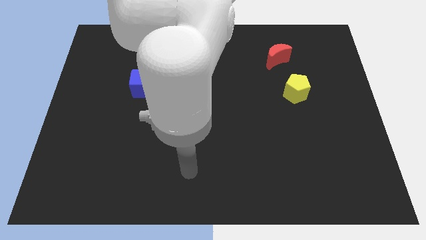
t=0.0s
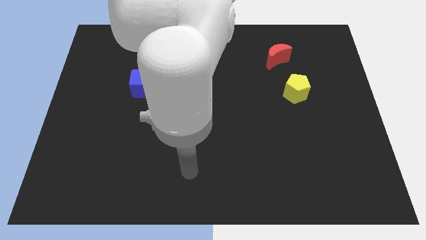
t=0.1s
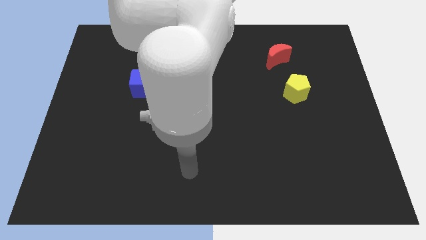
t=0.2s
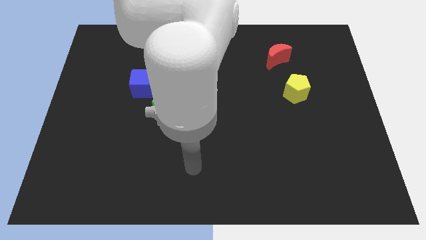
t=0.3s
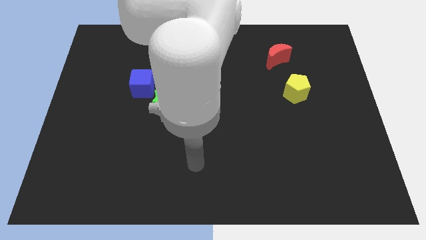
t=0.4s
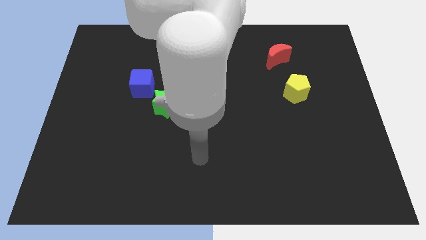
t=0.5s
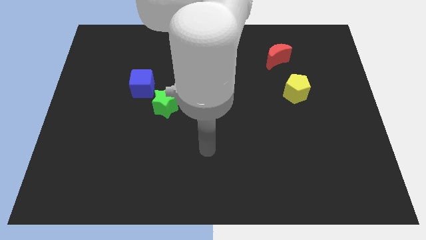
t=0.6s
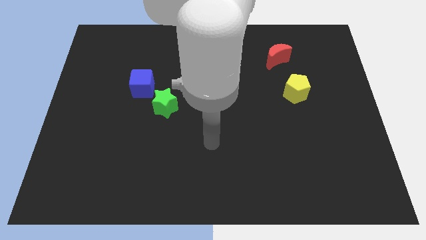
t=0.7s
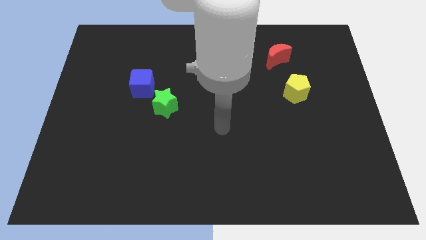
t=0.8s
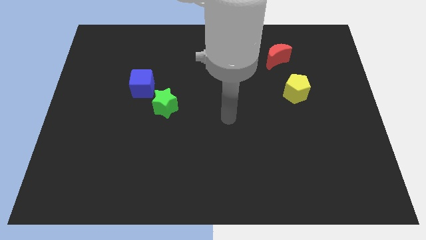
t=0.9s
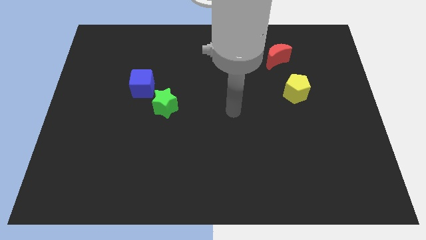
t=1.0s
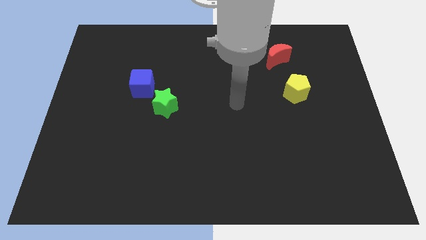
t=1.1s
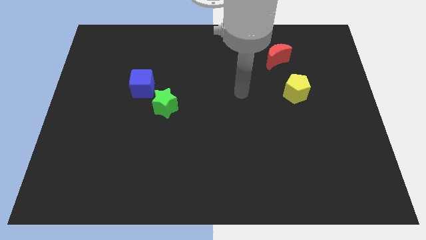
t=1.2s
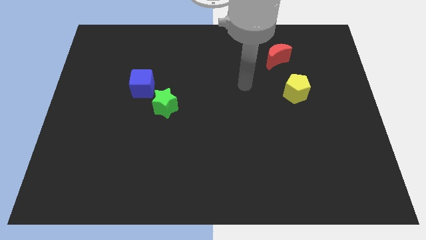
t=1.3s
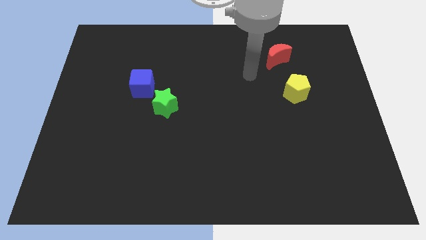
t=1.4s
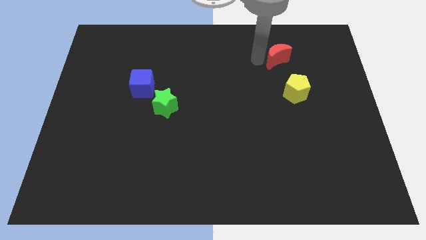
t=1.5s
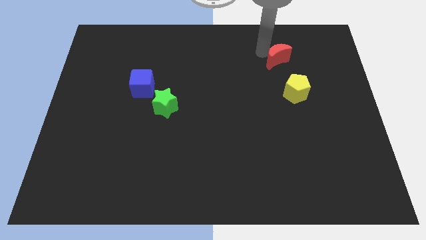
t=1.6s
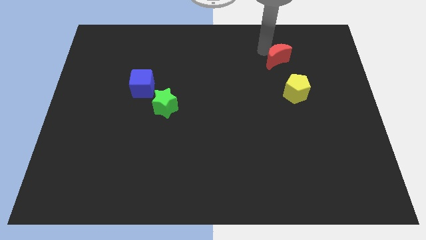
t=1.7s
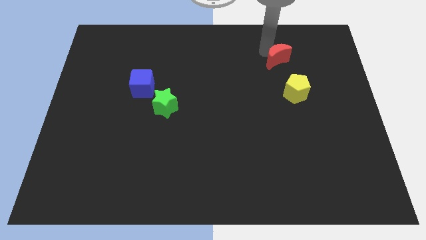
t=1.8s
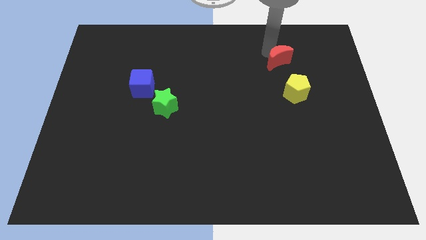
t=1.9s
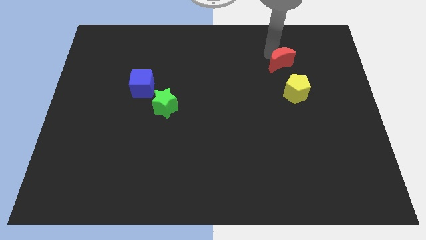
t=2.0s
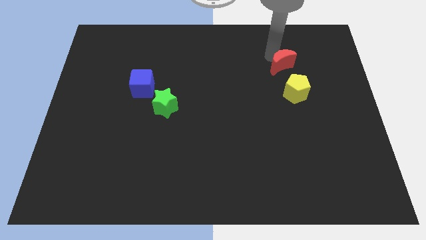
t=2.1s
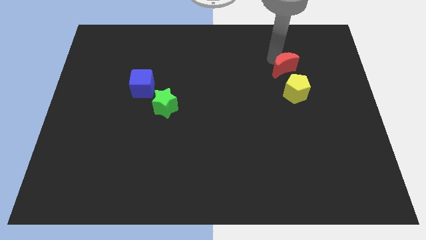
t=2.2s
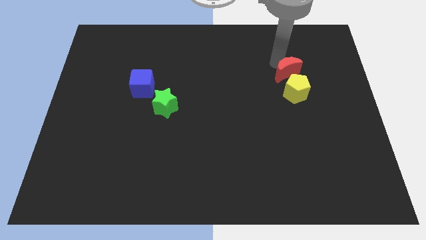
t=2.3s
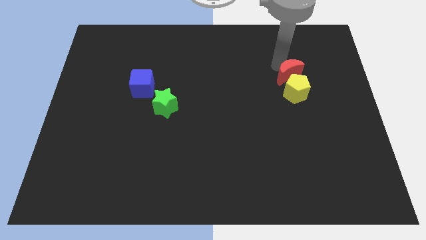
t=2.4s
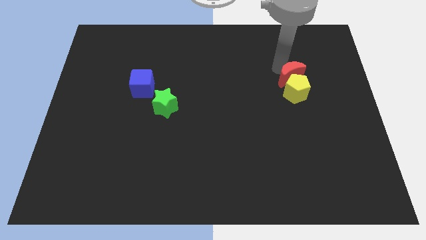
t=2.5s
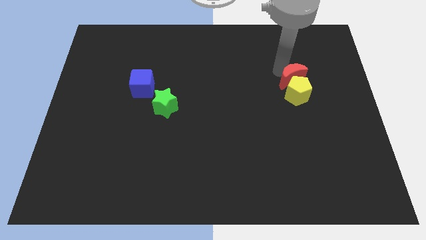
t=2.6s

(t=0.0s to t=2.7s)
move the red block to the pentagon

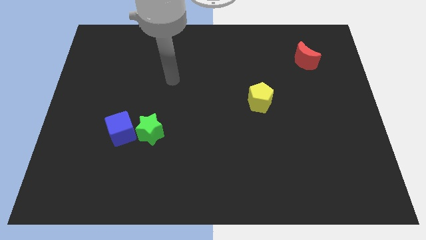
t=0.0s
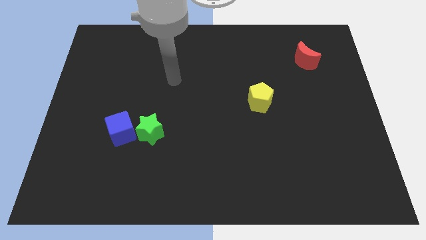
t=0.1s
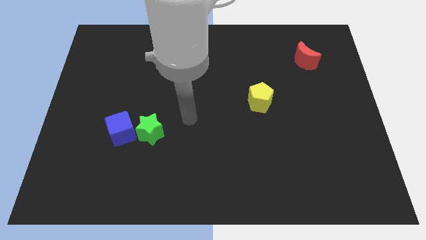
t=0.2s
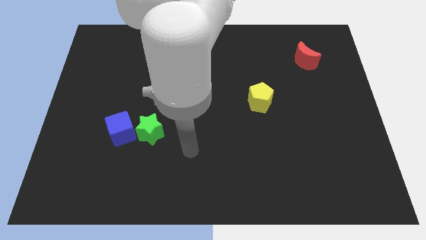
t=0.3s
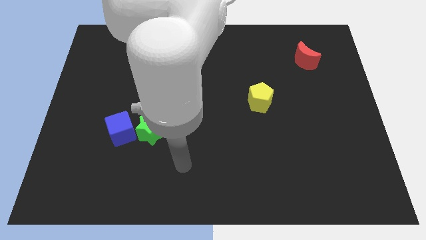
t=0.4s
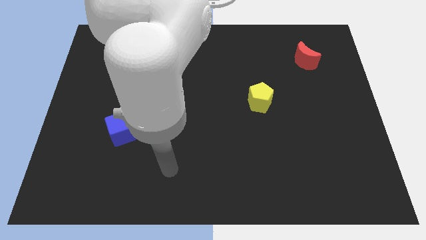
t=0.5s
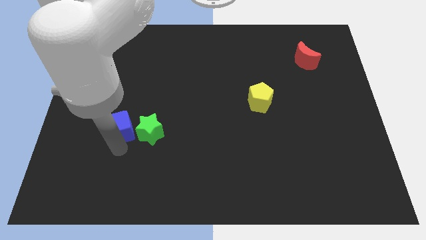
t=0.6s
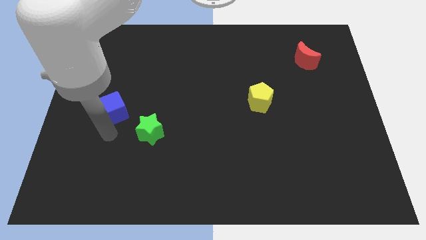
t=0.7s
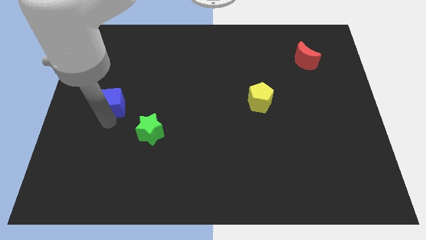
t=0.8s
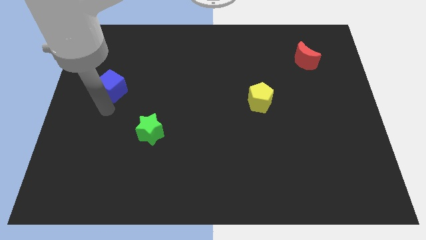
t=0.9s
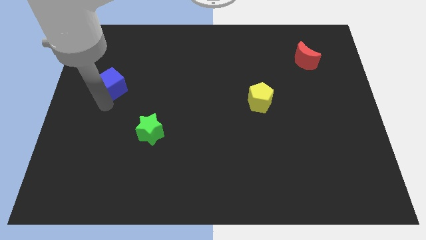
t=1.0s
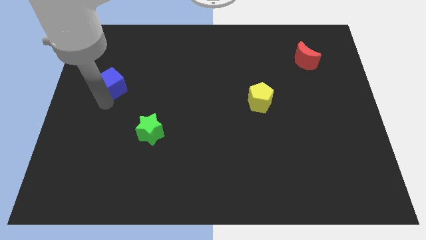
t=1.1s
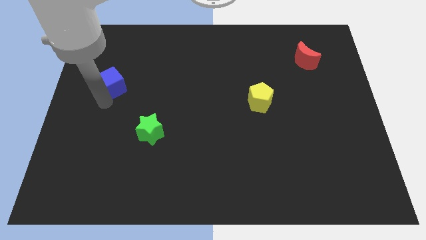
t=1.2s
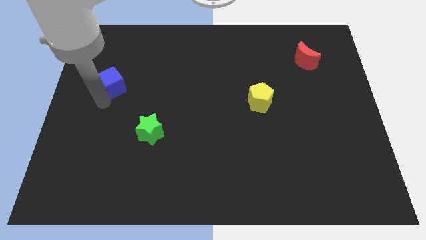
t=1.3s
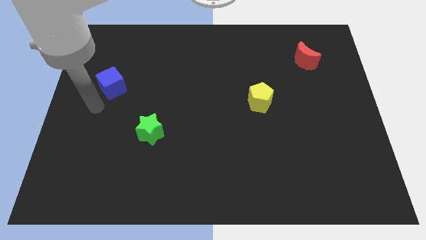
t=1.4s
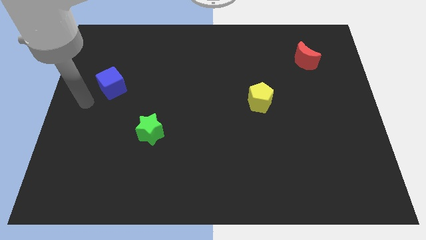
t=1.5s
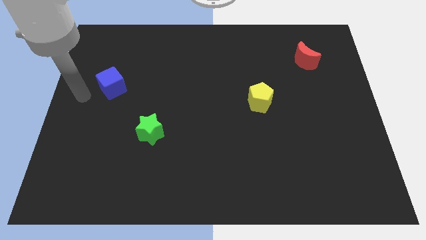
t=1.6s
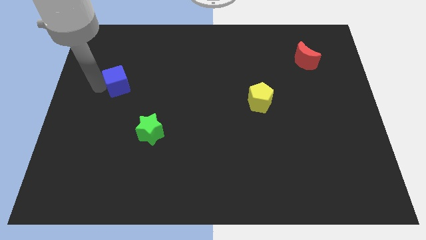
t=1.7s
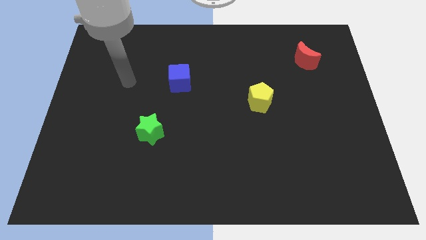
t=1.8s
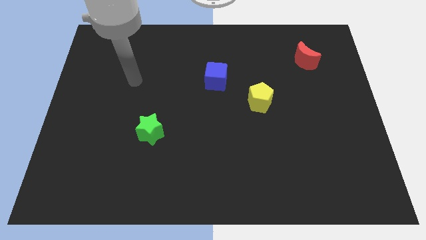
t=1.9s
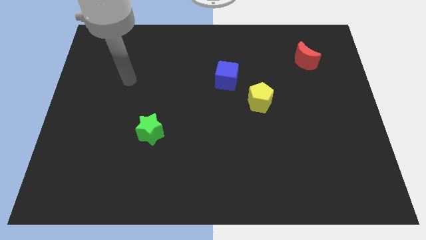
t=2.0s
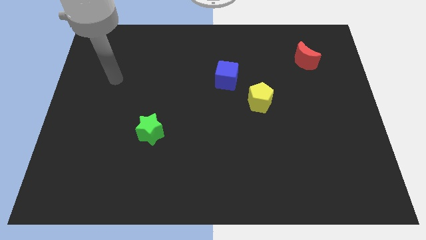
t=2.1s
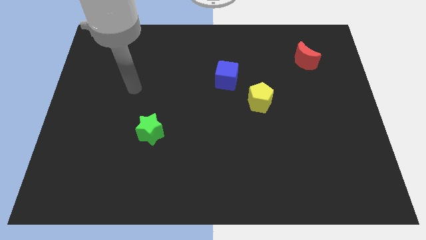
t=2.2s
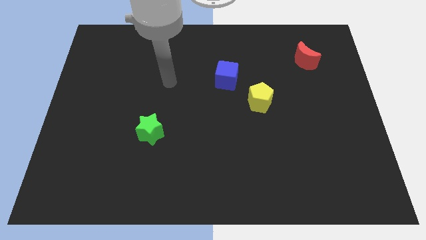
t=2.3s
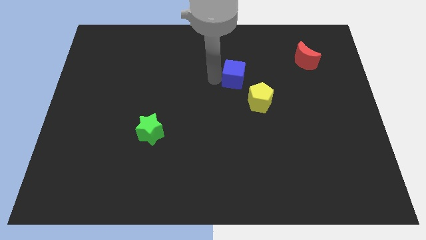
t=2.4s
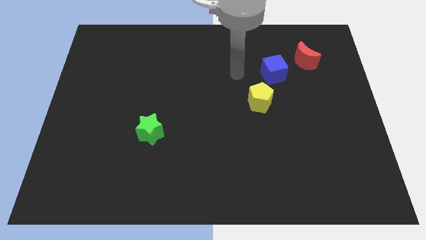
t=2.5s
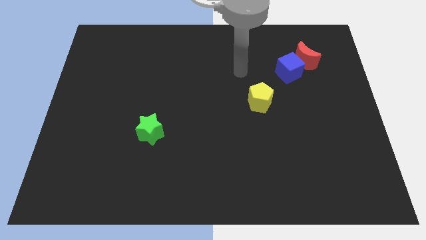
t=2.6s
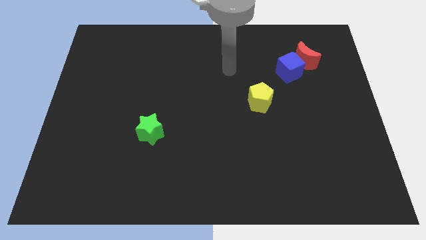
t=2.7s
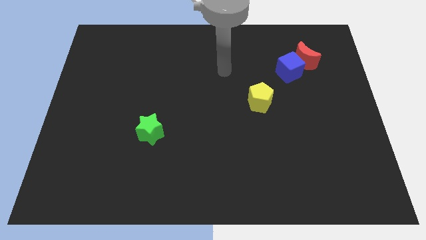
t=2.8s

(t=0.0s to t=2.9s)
push the blue cube next to the red moon

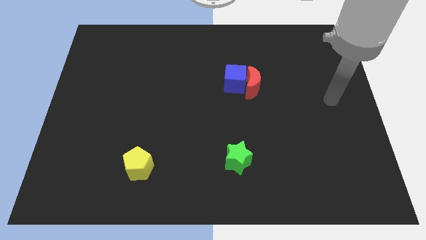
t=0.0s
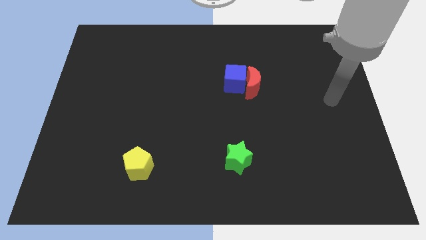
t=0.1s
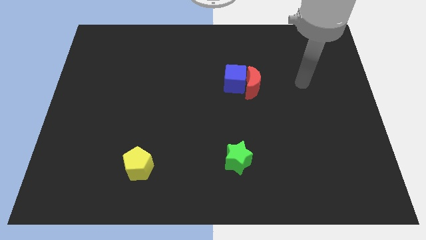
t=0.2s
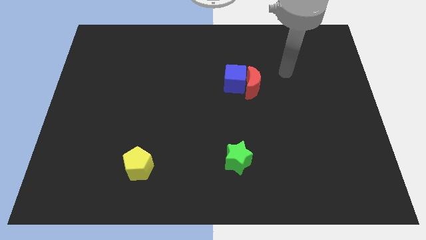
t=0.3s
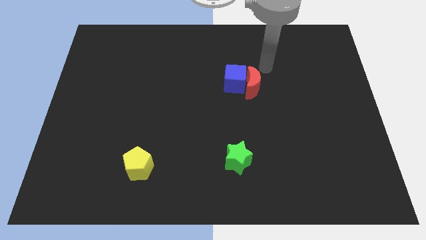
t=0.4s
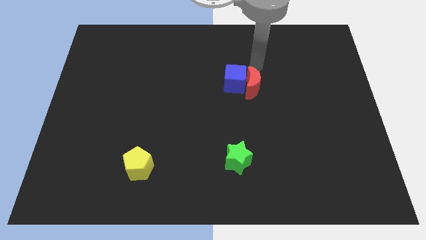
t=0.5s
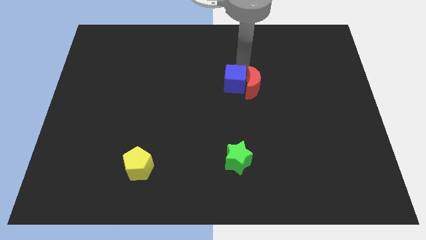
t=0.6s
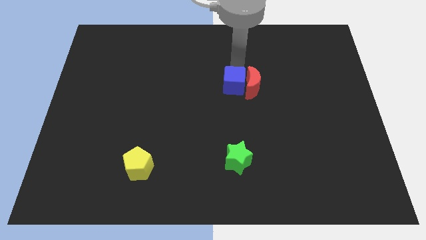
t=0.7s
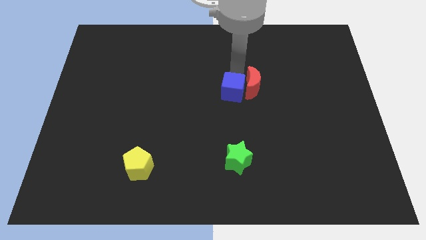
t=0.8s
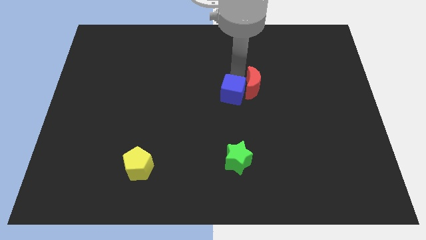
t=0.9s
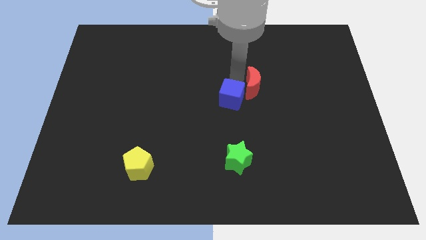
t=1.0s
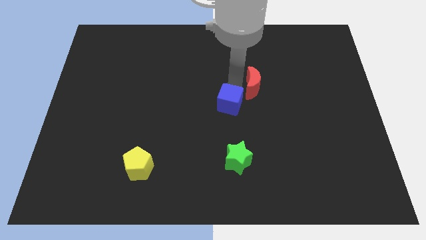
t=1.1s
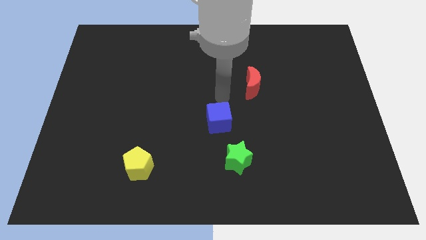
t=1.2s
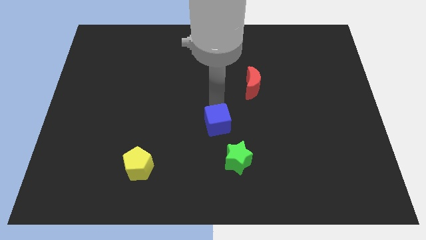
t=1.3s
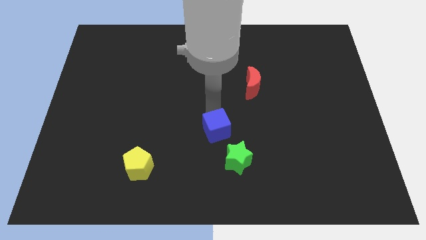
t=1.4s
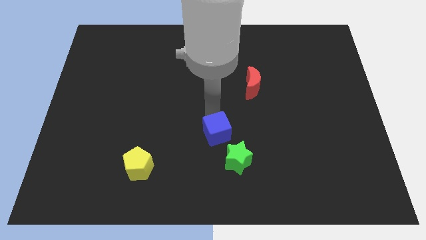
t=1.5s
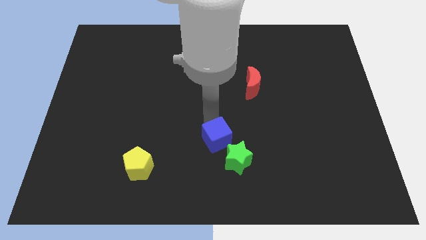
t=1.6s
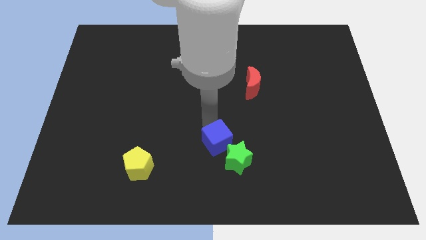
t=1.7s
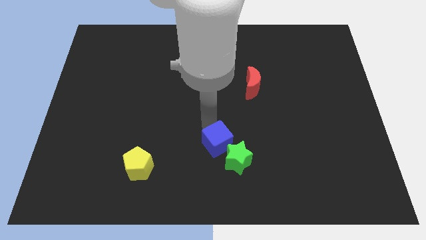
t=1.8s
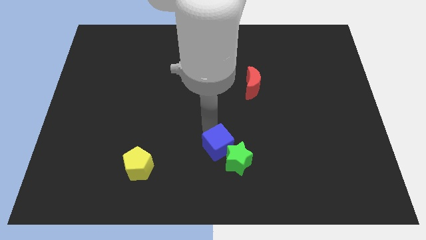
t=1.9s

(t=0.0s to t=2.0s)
put the blue block next to the star

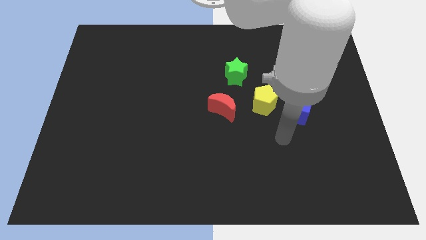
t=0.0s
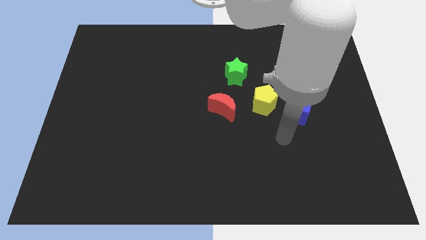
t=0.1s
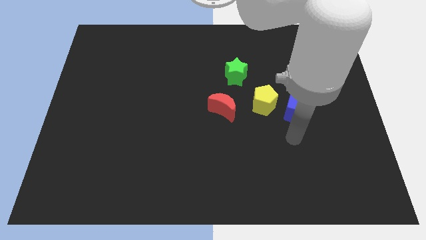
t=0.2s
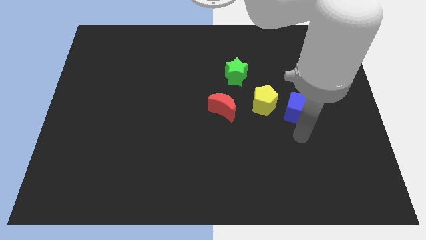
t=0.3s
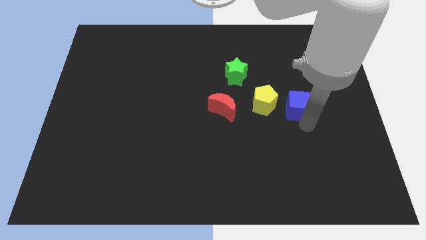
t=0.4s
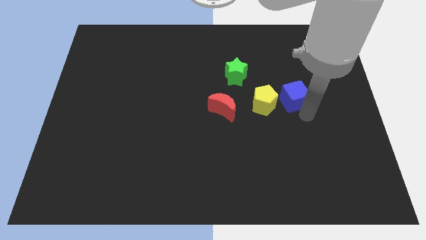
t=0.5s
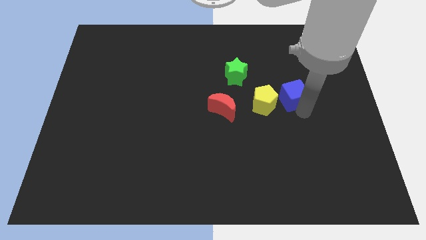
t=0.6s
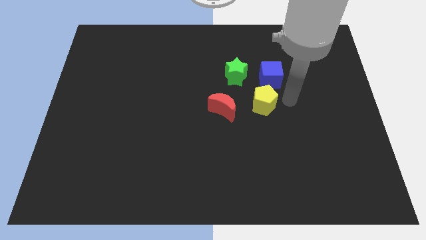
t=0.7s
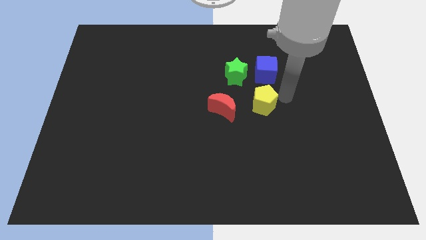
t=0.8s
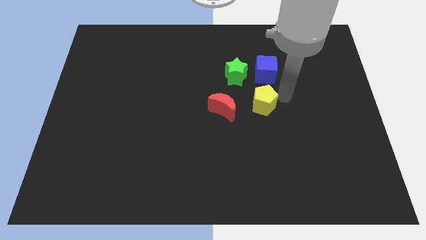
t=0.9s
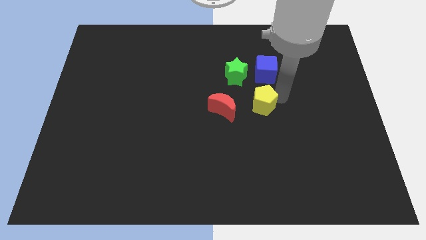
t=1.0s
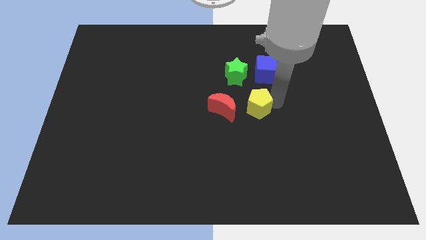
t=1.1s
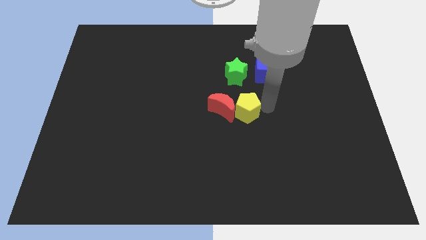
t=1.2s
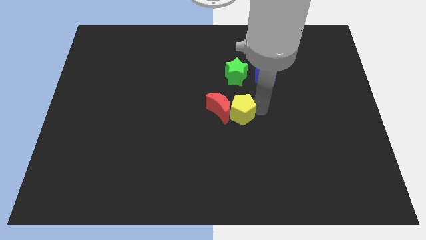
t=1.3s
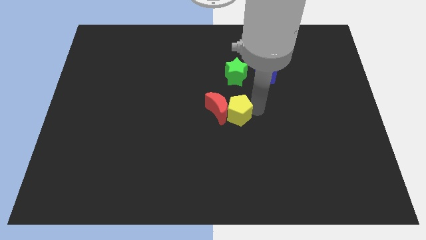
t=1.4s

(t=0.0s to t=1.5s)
slide the yellow block next to the red moon
